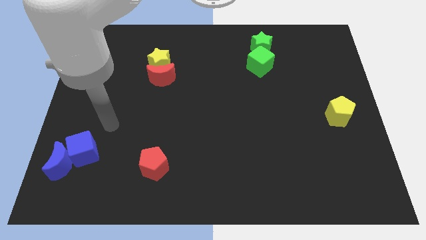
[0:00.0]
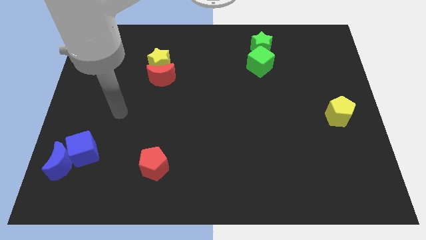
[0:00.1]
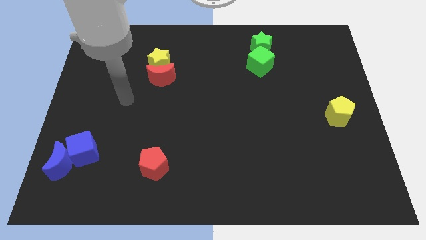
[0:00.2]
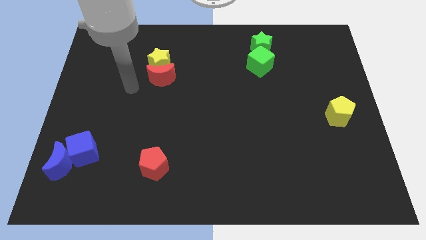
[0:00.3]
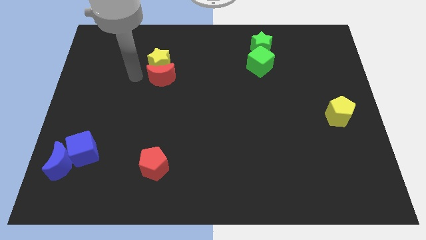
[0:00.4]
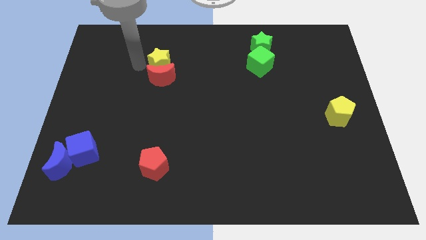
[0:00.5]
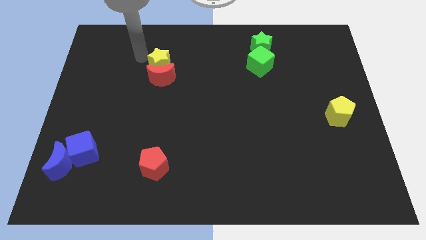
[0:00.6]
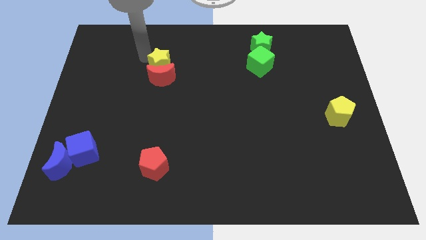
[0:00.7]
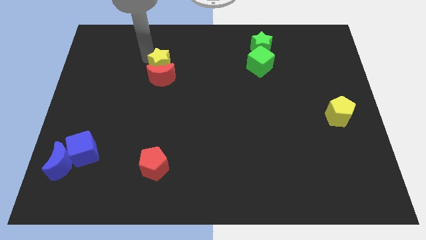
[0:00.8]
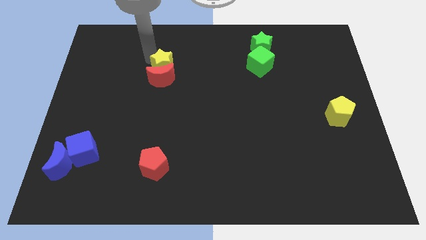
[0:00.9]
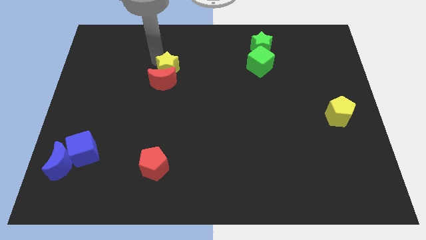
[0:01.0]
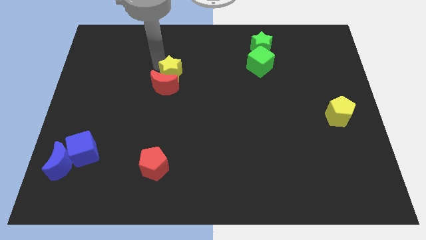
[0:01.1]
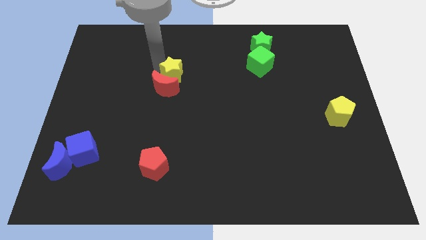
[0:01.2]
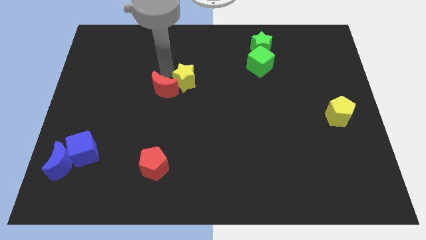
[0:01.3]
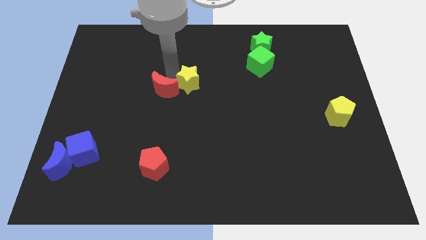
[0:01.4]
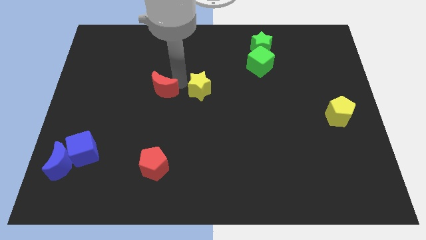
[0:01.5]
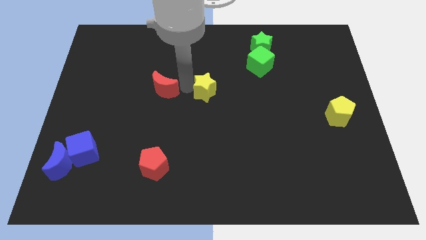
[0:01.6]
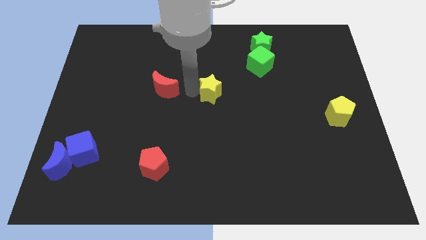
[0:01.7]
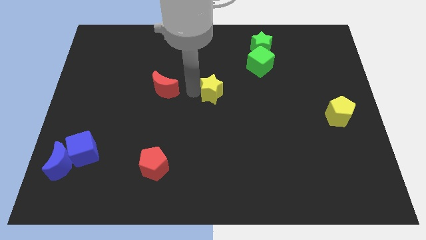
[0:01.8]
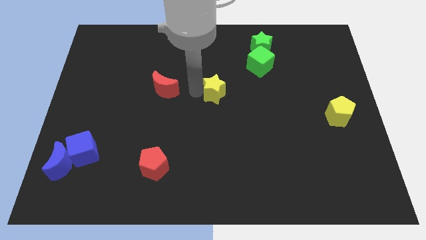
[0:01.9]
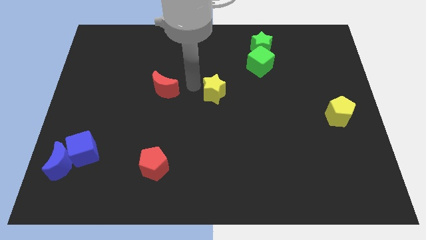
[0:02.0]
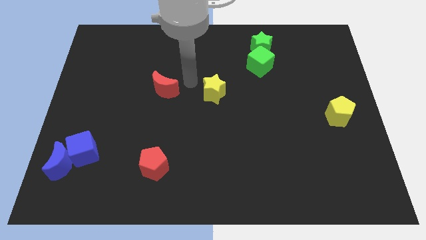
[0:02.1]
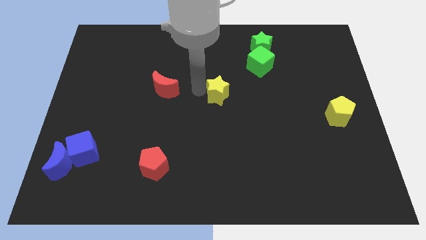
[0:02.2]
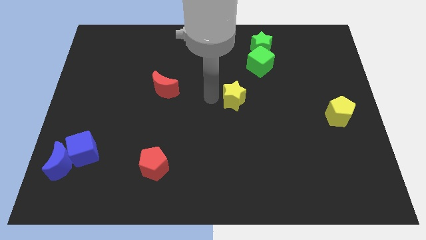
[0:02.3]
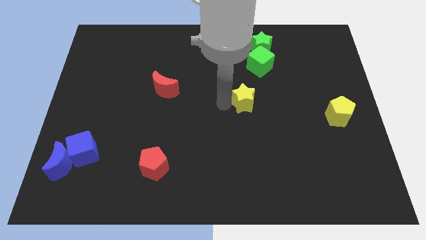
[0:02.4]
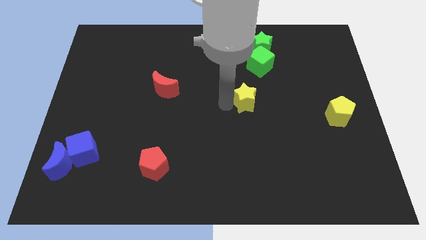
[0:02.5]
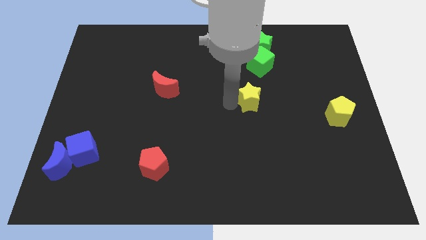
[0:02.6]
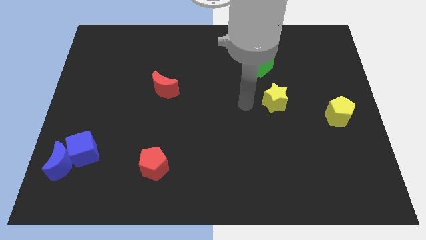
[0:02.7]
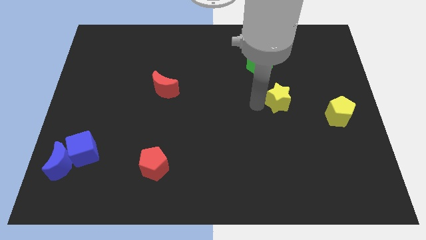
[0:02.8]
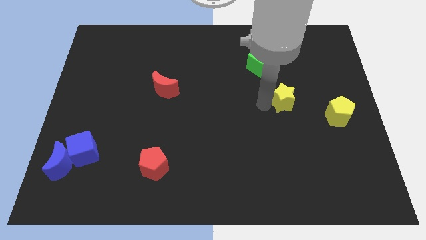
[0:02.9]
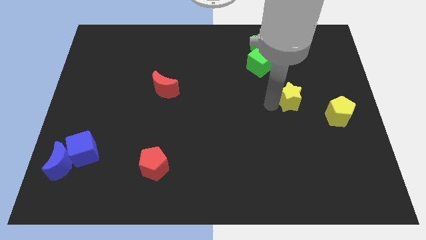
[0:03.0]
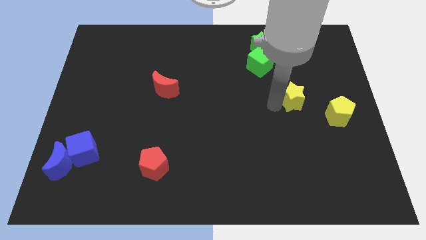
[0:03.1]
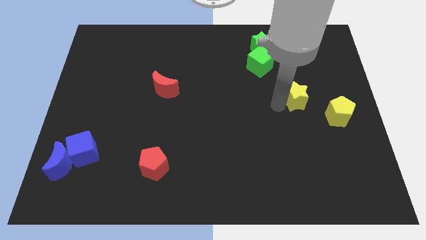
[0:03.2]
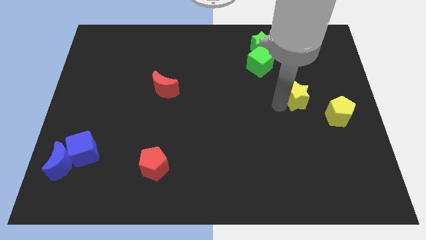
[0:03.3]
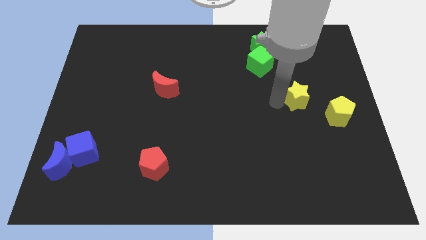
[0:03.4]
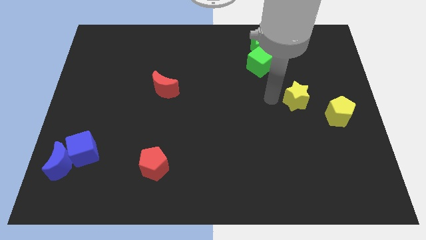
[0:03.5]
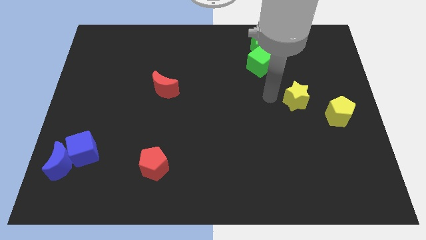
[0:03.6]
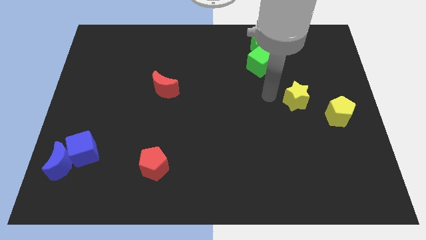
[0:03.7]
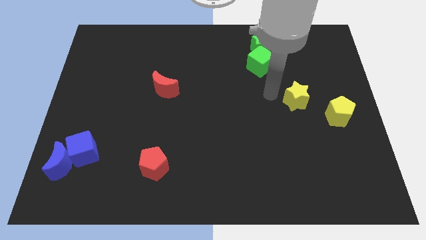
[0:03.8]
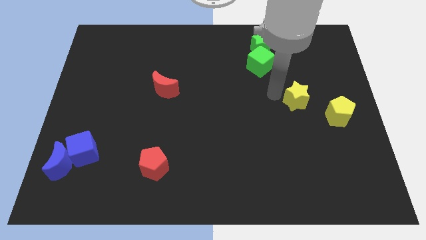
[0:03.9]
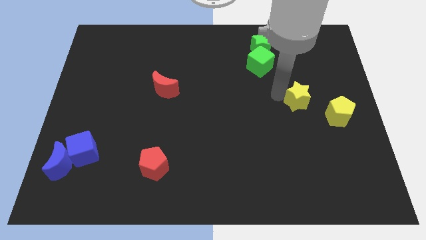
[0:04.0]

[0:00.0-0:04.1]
push the yellow star slightly to the right side of the board

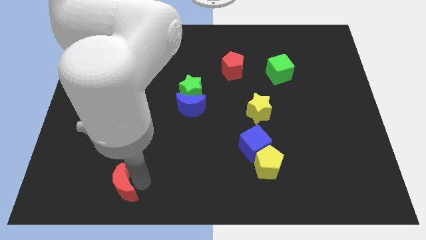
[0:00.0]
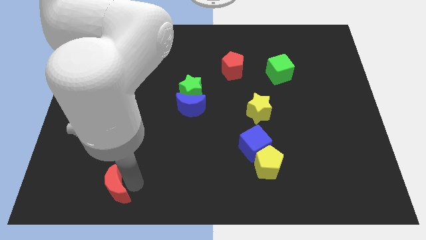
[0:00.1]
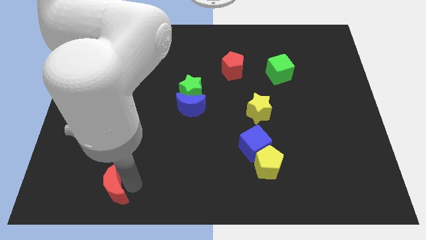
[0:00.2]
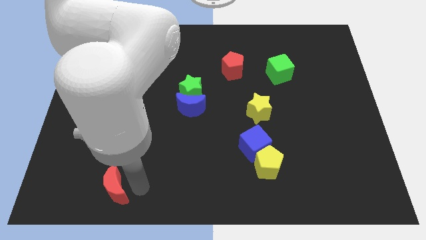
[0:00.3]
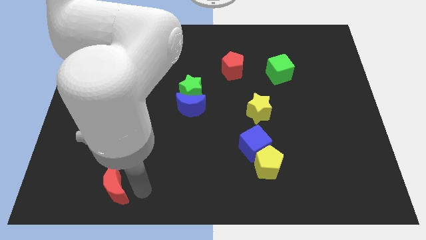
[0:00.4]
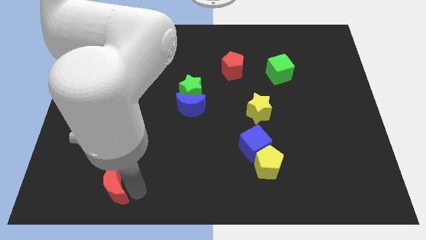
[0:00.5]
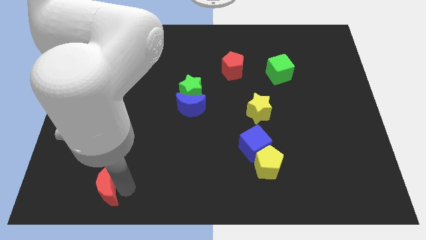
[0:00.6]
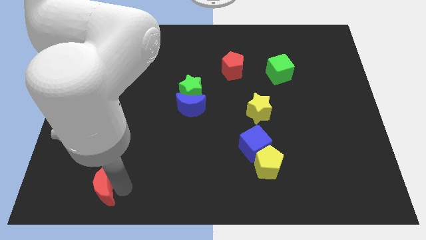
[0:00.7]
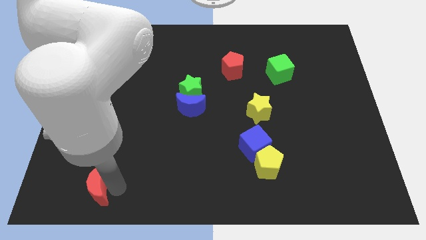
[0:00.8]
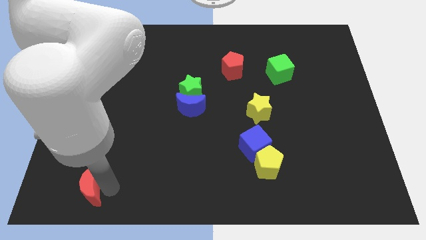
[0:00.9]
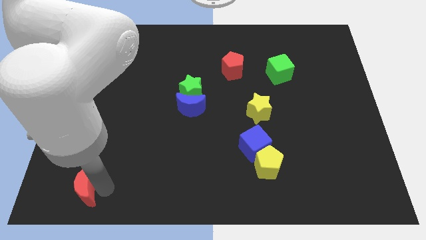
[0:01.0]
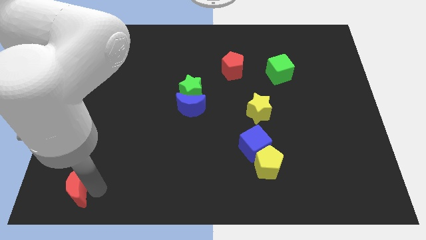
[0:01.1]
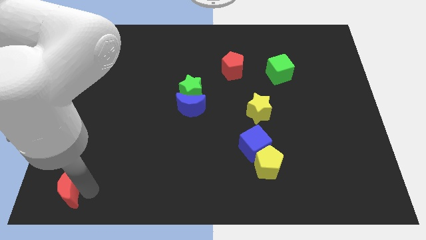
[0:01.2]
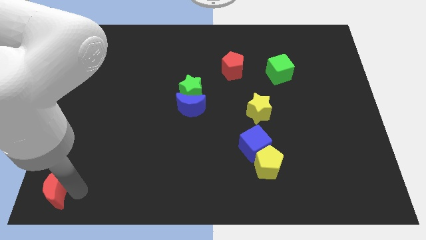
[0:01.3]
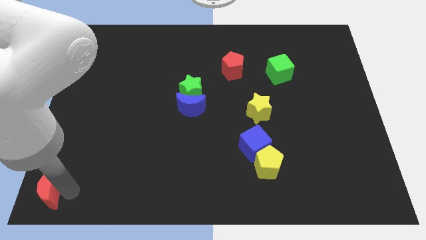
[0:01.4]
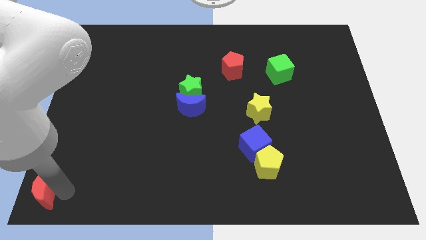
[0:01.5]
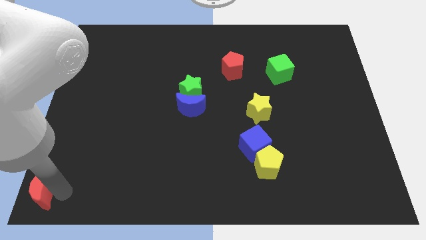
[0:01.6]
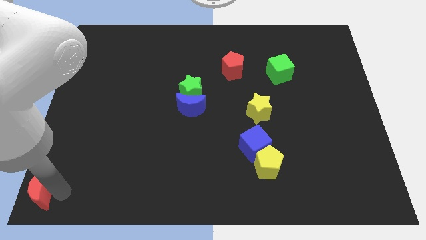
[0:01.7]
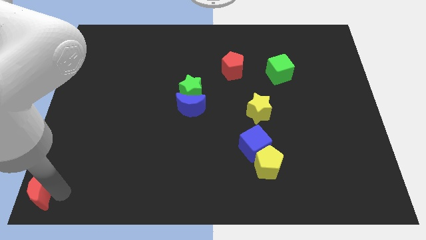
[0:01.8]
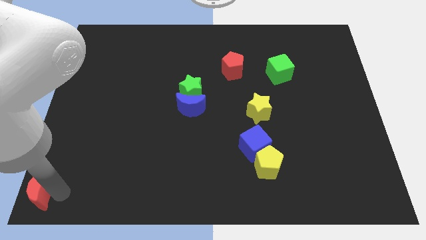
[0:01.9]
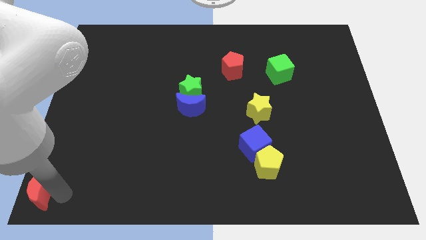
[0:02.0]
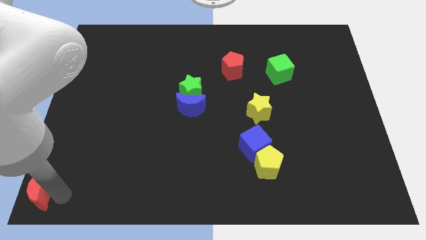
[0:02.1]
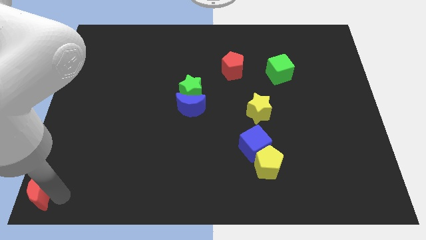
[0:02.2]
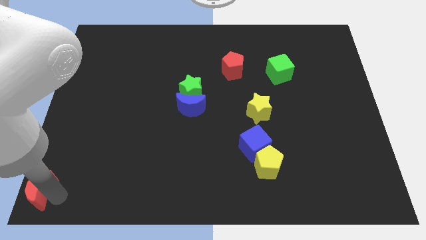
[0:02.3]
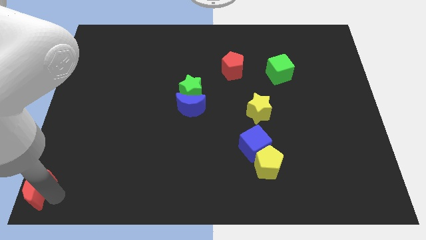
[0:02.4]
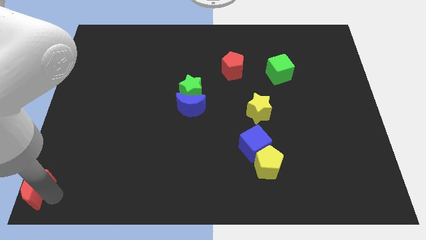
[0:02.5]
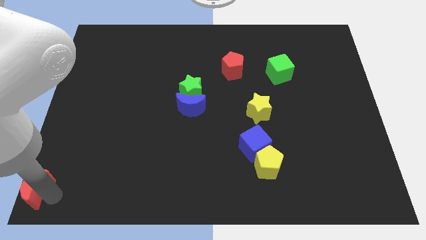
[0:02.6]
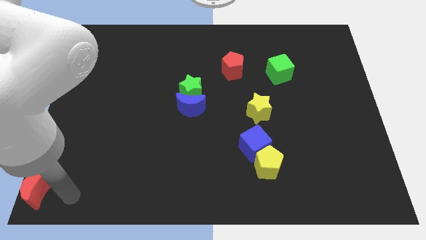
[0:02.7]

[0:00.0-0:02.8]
push the red moon to the bottom left of the board

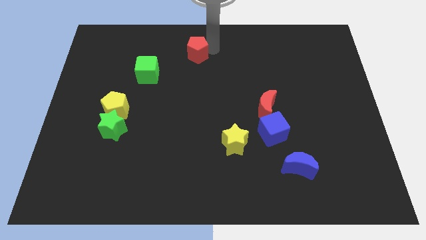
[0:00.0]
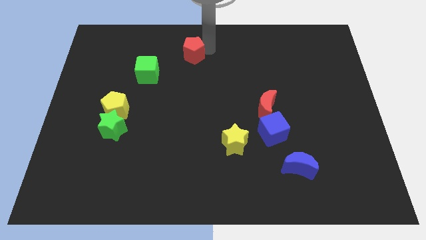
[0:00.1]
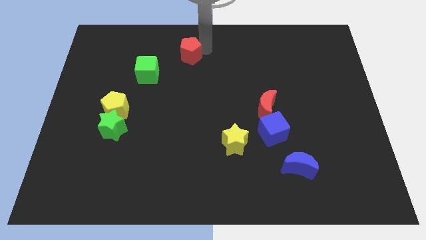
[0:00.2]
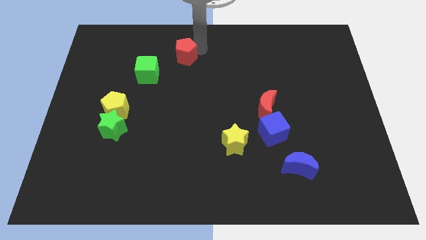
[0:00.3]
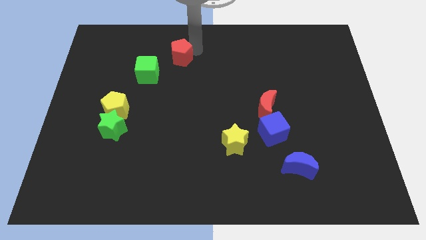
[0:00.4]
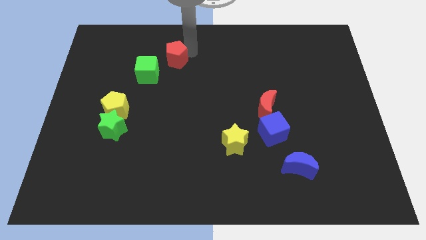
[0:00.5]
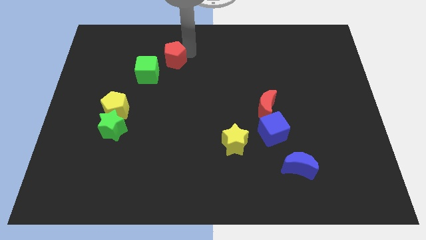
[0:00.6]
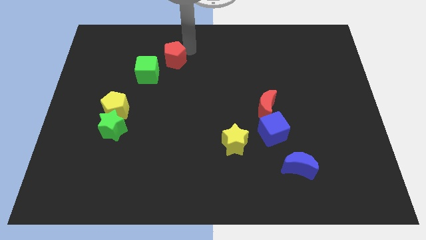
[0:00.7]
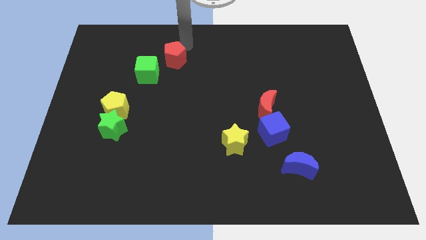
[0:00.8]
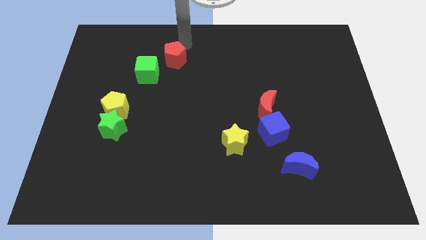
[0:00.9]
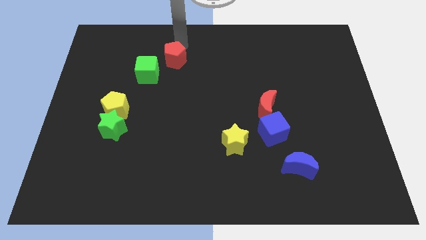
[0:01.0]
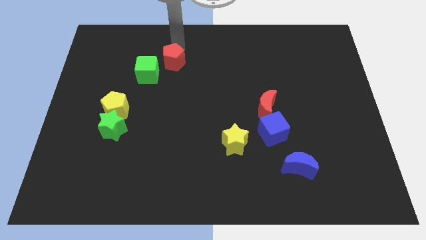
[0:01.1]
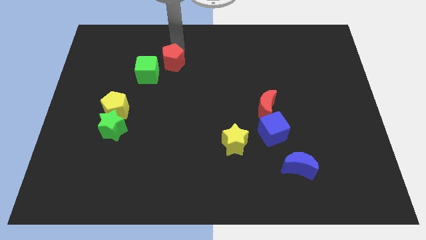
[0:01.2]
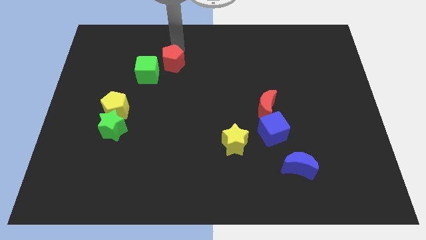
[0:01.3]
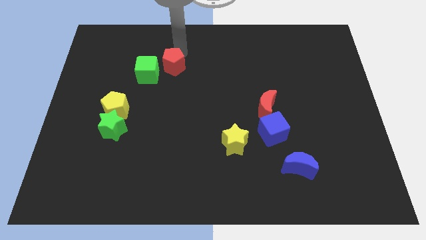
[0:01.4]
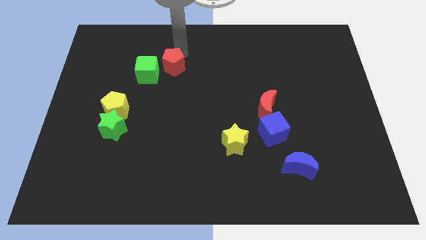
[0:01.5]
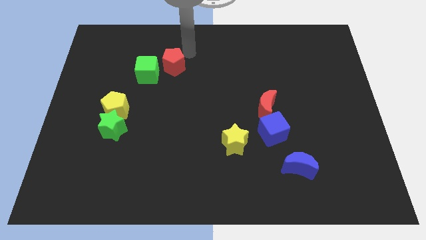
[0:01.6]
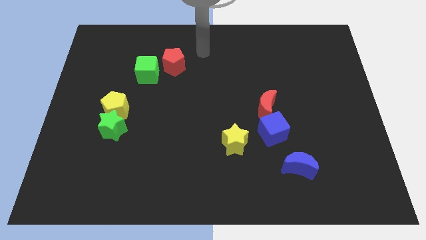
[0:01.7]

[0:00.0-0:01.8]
move the red pentagon close to the green cube

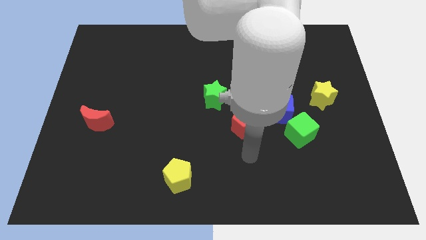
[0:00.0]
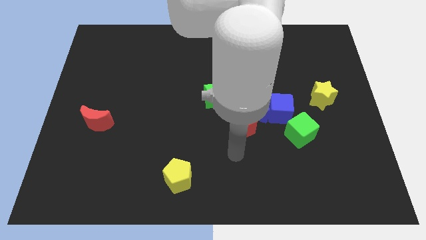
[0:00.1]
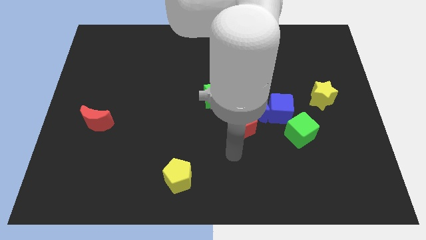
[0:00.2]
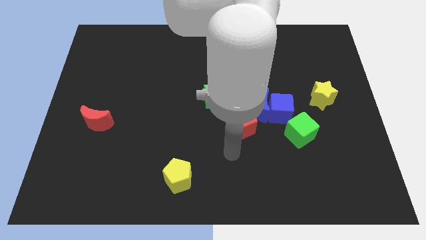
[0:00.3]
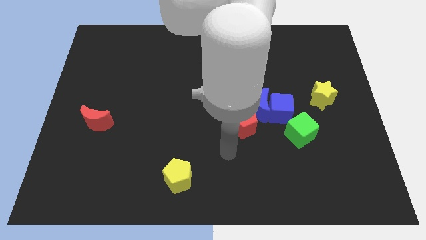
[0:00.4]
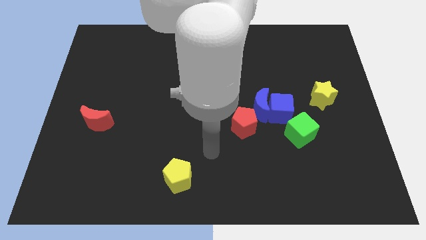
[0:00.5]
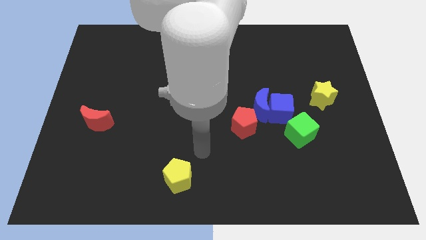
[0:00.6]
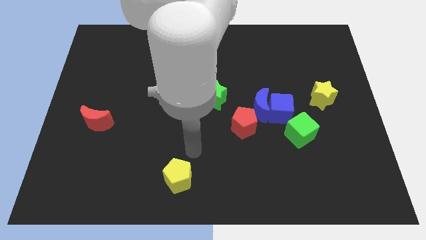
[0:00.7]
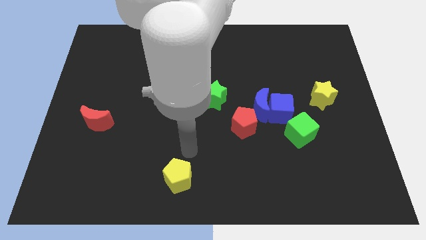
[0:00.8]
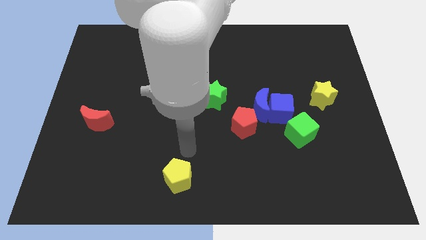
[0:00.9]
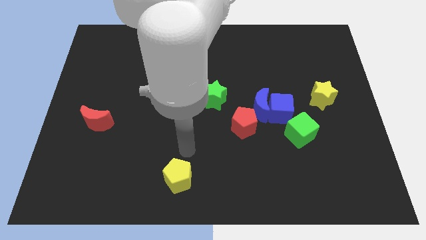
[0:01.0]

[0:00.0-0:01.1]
slide your arm on top of yellow pentagon
